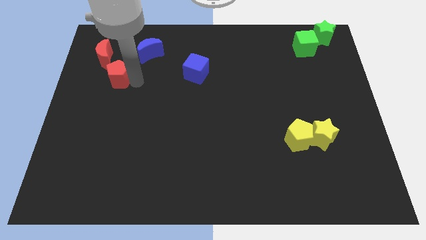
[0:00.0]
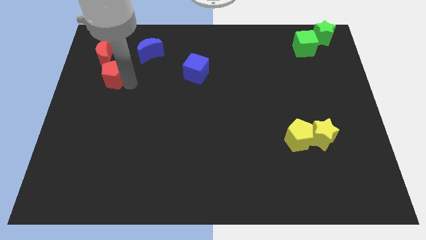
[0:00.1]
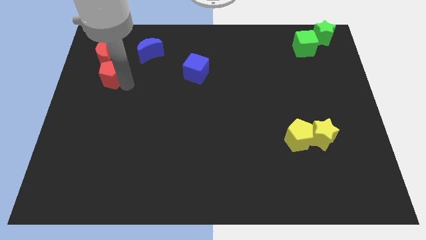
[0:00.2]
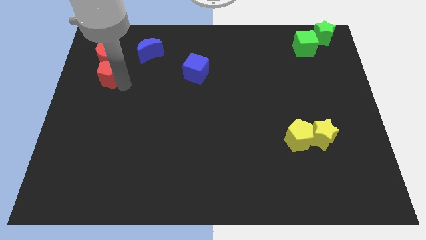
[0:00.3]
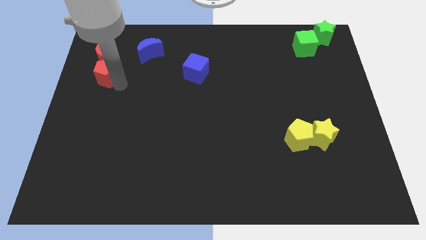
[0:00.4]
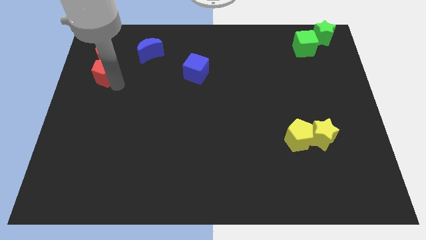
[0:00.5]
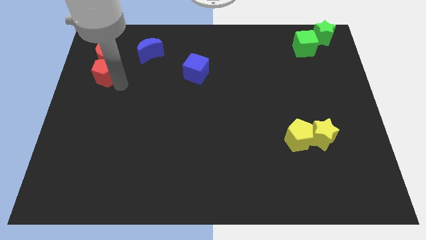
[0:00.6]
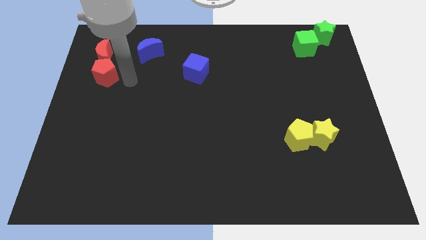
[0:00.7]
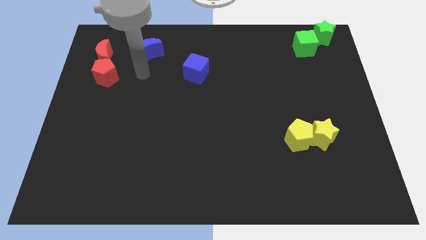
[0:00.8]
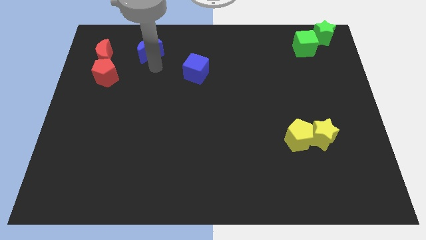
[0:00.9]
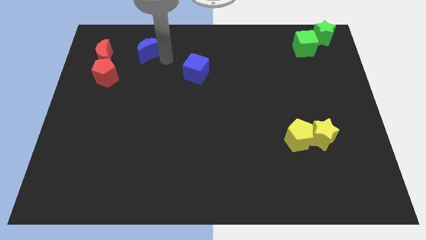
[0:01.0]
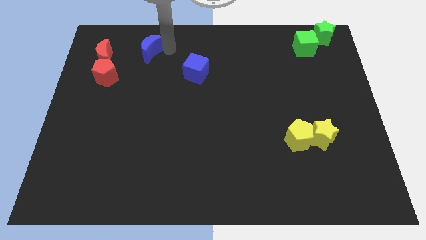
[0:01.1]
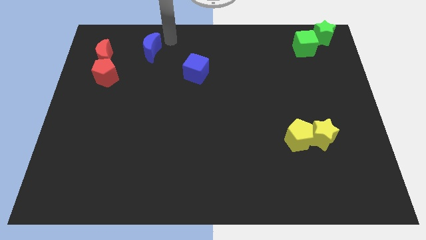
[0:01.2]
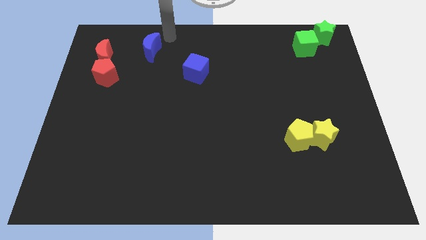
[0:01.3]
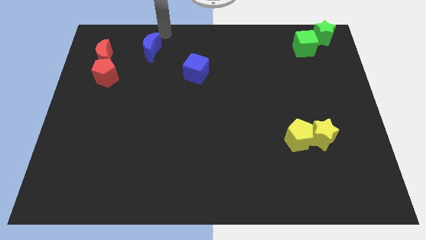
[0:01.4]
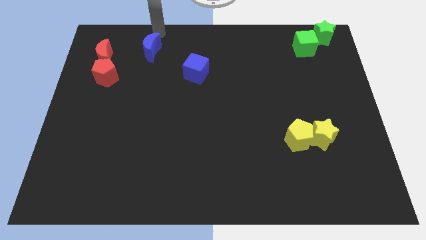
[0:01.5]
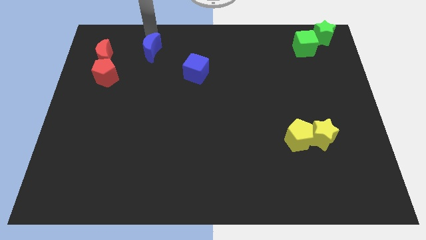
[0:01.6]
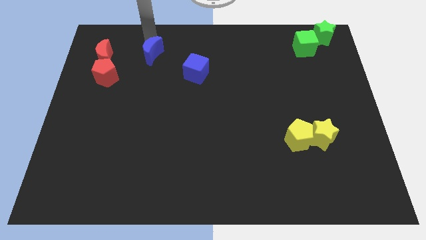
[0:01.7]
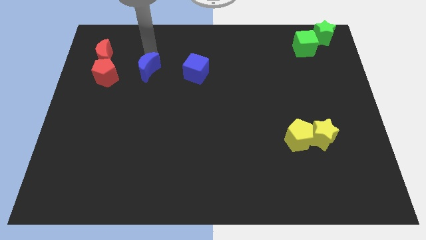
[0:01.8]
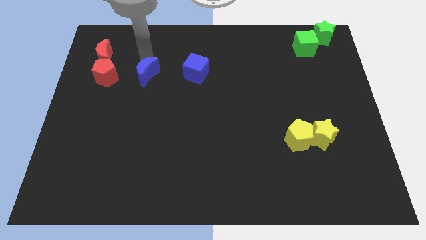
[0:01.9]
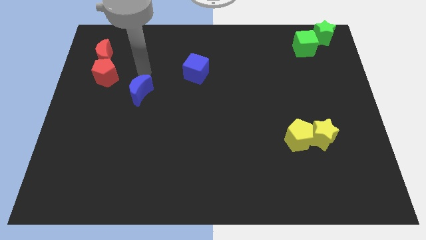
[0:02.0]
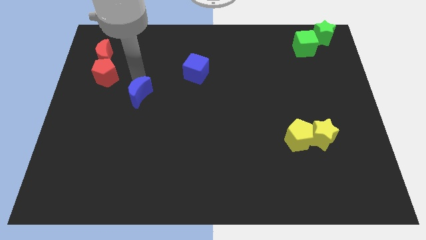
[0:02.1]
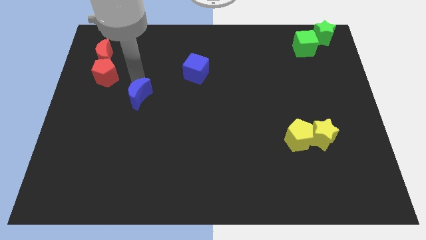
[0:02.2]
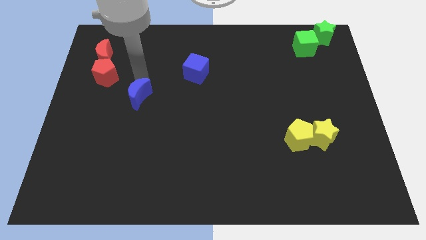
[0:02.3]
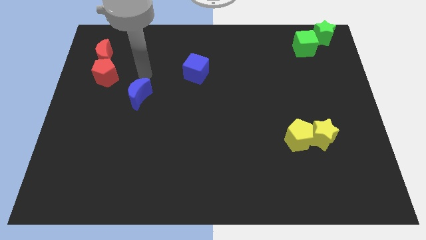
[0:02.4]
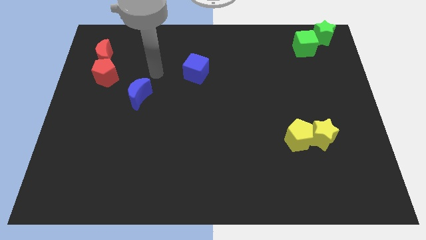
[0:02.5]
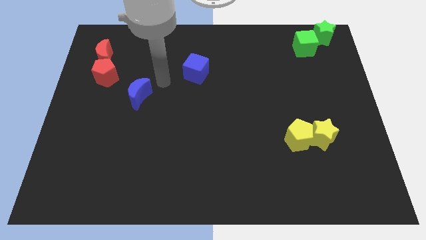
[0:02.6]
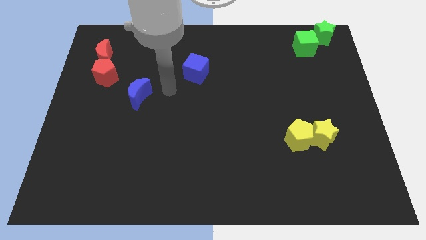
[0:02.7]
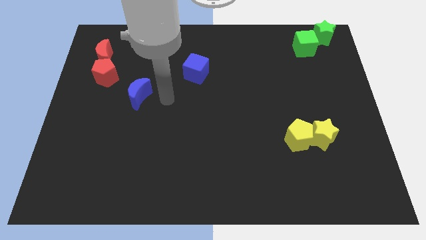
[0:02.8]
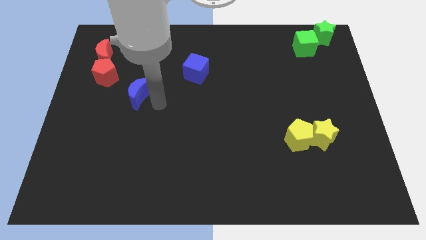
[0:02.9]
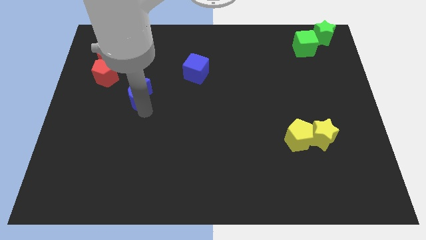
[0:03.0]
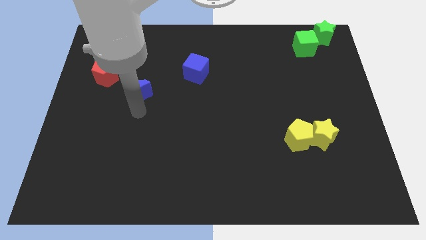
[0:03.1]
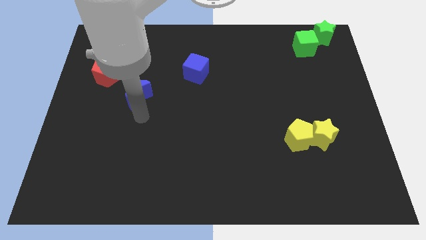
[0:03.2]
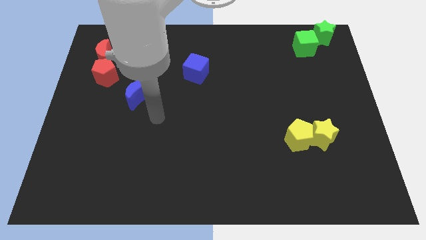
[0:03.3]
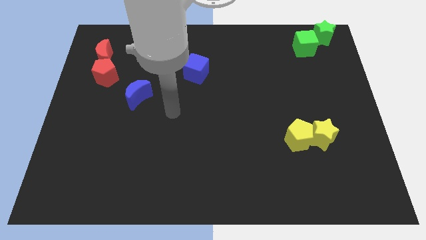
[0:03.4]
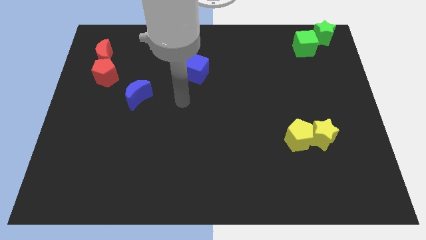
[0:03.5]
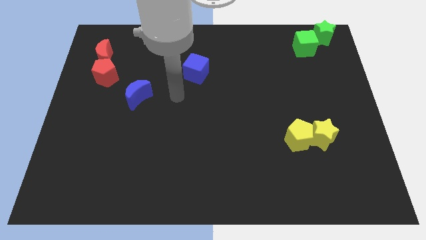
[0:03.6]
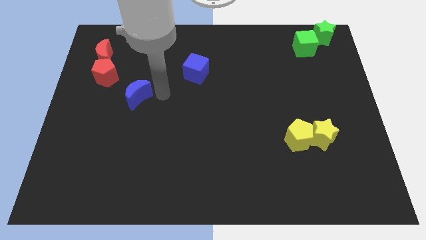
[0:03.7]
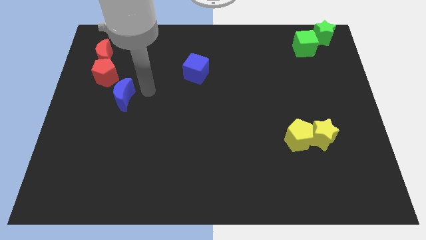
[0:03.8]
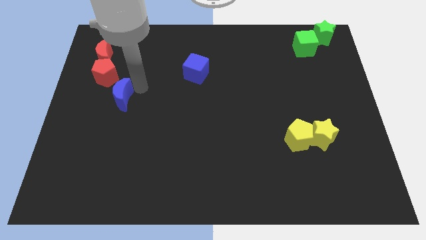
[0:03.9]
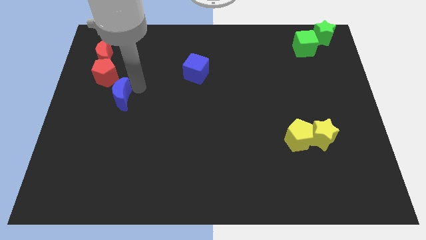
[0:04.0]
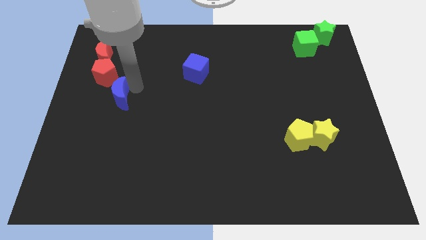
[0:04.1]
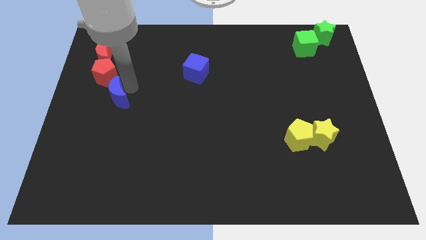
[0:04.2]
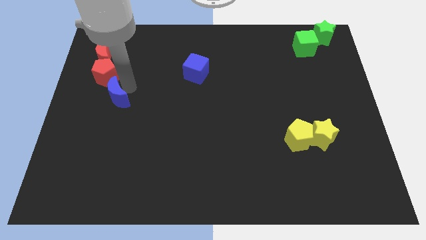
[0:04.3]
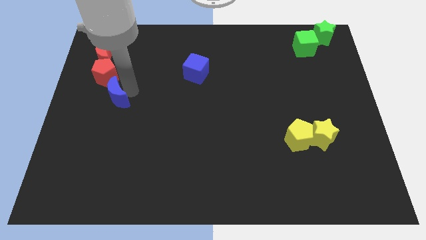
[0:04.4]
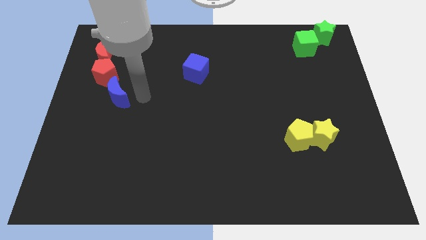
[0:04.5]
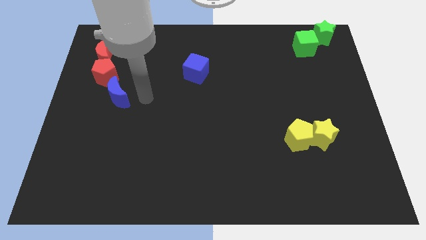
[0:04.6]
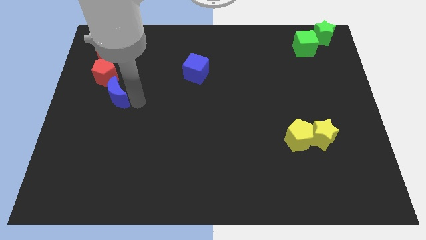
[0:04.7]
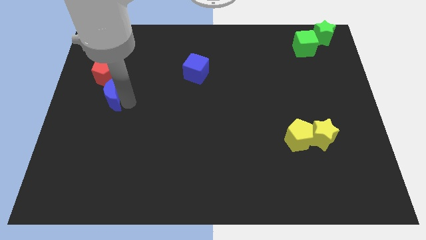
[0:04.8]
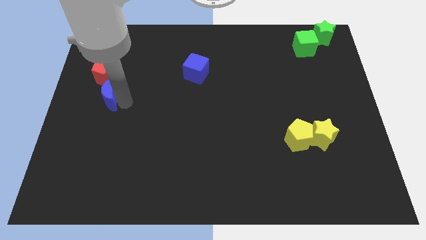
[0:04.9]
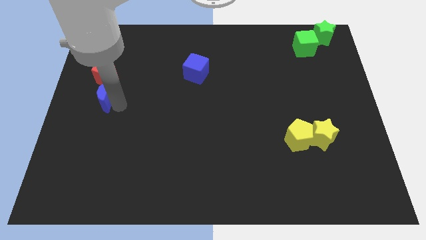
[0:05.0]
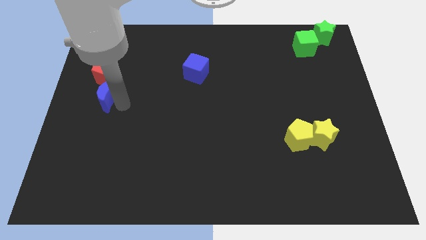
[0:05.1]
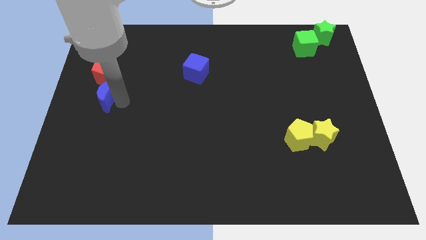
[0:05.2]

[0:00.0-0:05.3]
put the blue moon below the red pentagon

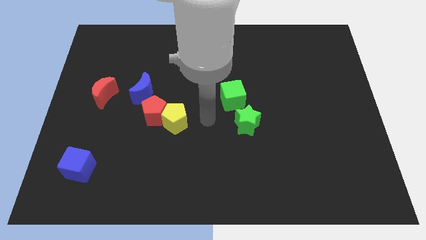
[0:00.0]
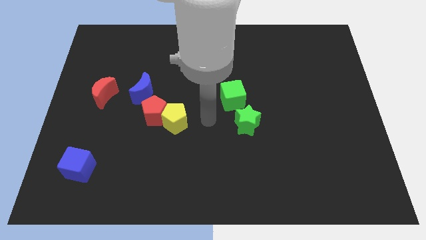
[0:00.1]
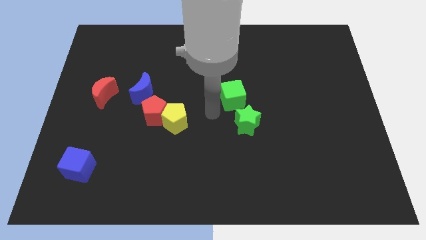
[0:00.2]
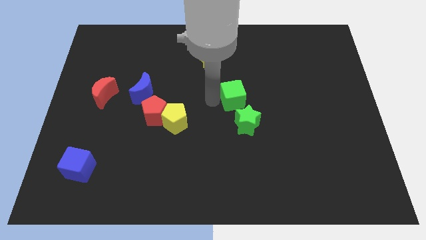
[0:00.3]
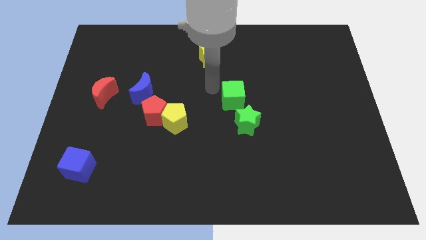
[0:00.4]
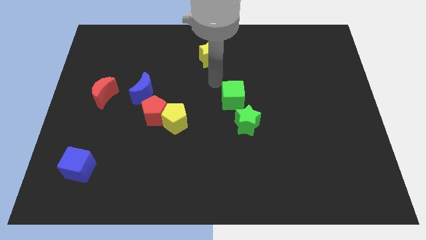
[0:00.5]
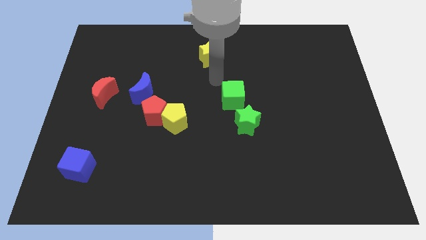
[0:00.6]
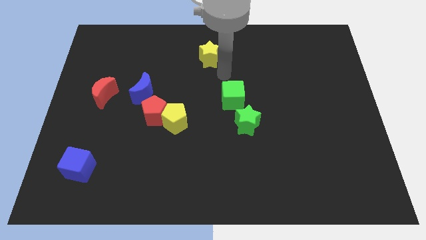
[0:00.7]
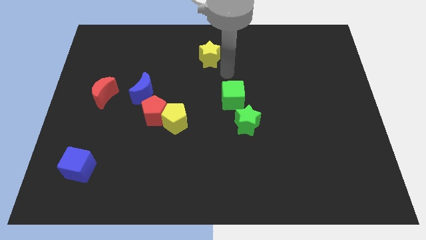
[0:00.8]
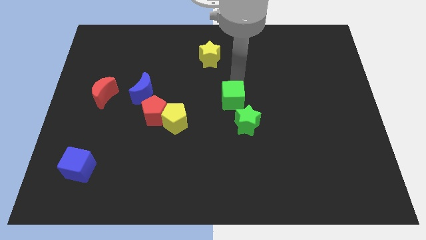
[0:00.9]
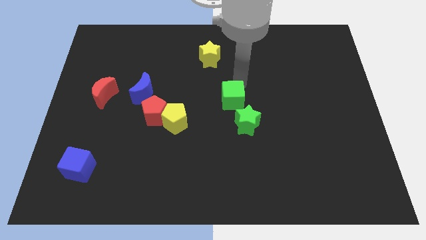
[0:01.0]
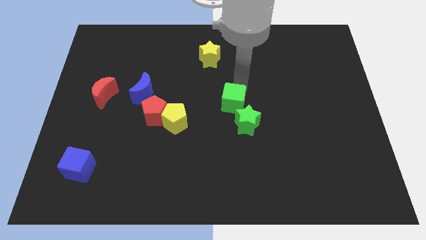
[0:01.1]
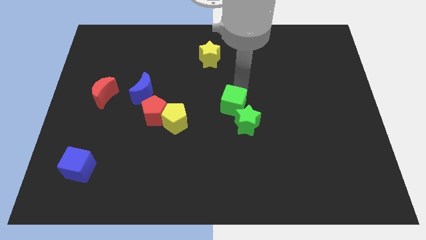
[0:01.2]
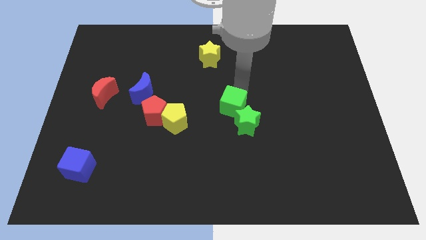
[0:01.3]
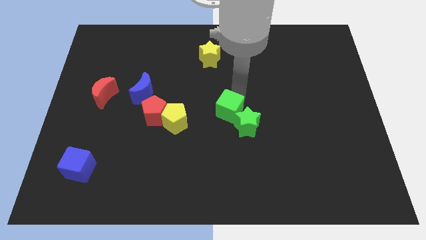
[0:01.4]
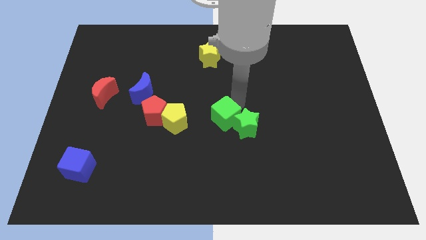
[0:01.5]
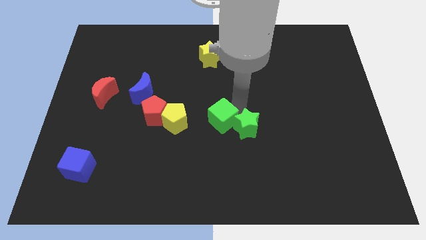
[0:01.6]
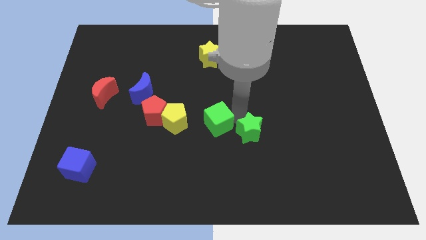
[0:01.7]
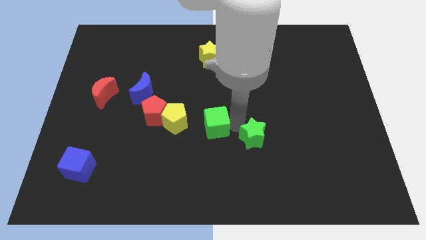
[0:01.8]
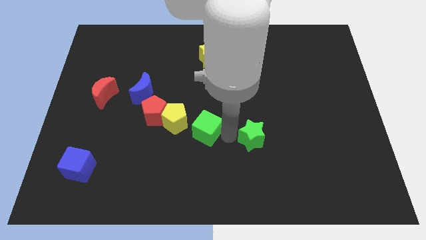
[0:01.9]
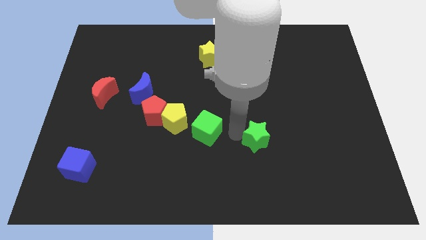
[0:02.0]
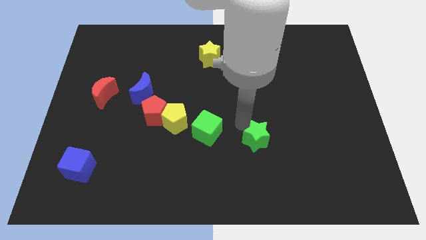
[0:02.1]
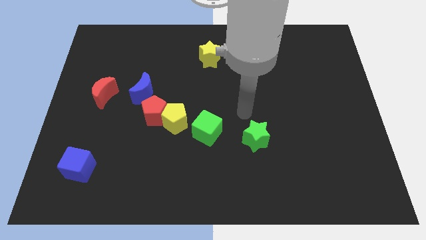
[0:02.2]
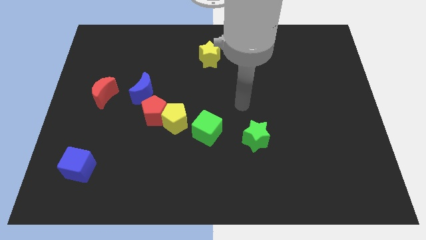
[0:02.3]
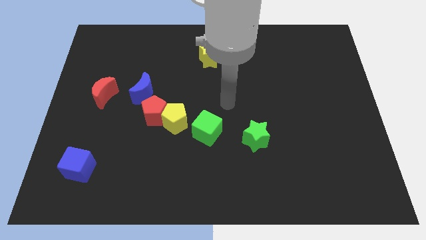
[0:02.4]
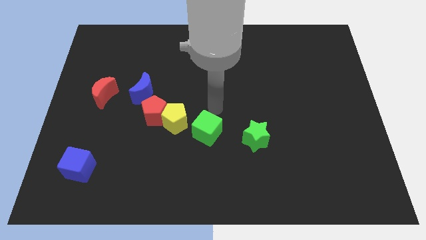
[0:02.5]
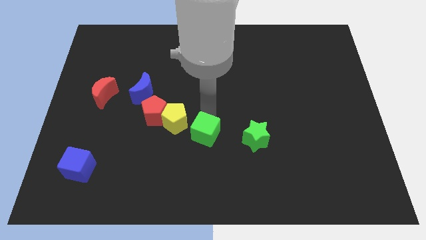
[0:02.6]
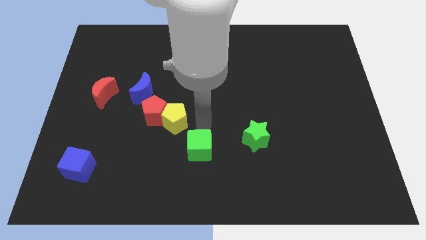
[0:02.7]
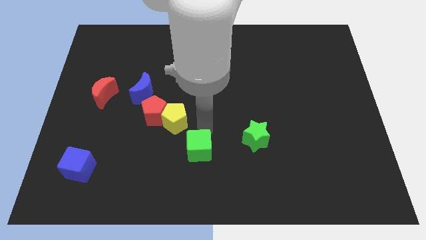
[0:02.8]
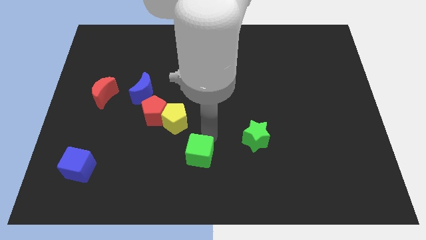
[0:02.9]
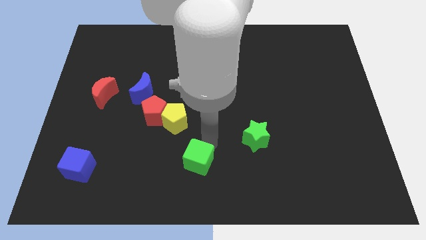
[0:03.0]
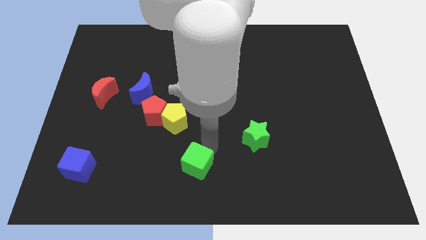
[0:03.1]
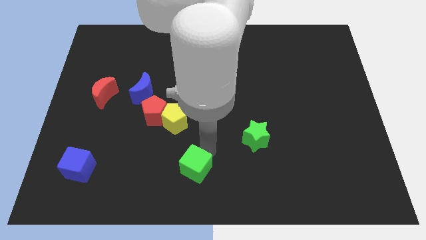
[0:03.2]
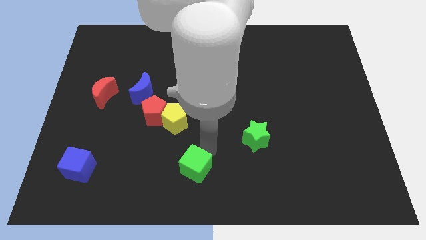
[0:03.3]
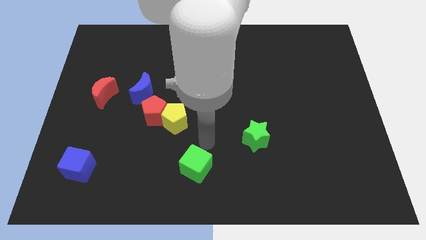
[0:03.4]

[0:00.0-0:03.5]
move both the green blocks diagonal to each other

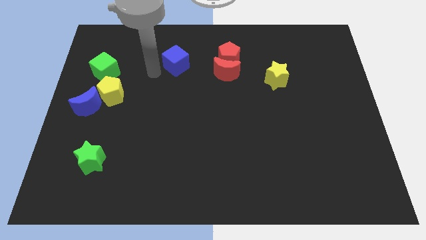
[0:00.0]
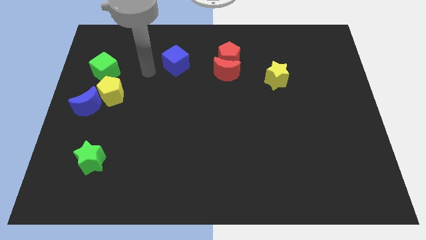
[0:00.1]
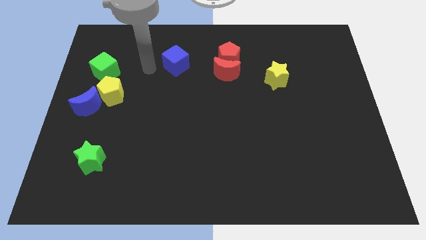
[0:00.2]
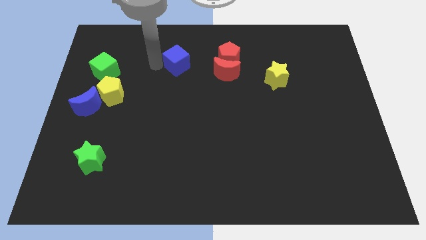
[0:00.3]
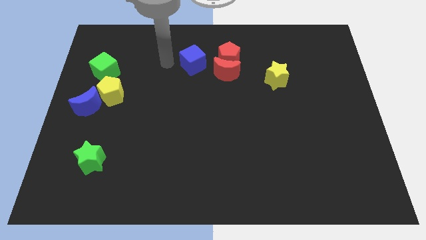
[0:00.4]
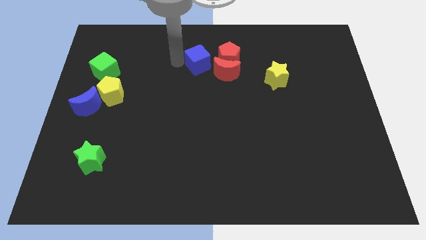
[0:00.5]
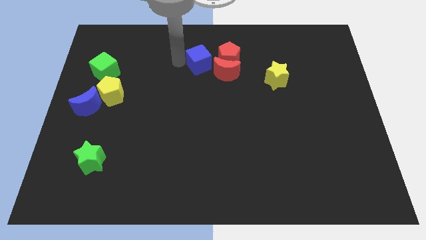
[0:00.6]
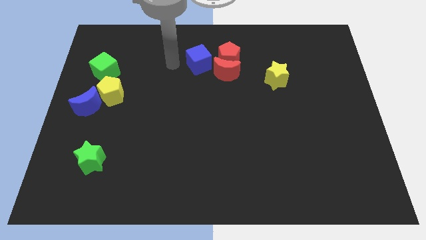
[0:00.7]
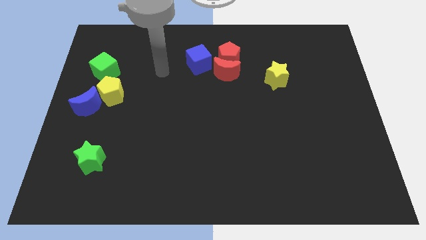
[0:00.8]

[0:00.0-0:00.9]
place blue cube to the left side of red blocks
